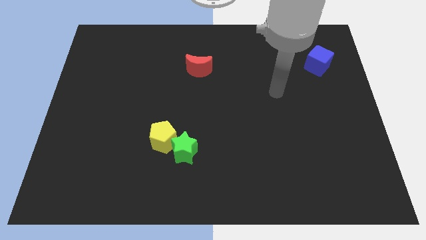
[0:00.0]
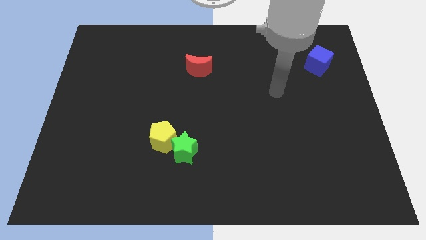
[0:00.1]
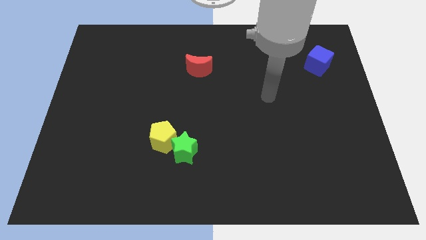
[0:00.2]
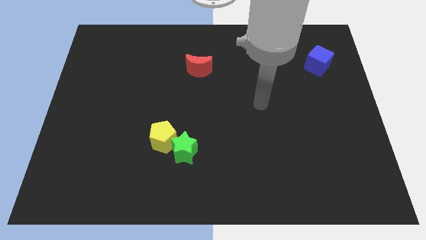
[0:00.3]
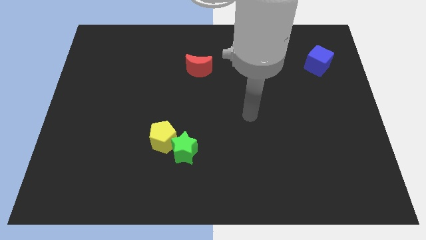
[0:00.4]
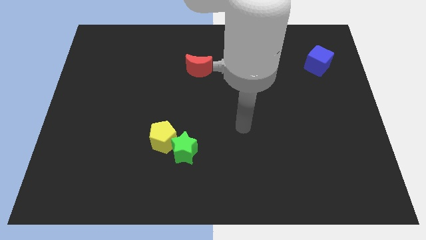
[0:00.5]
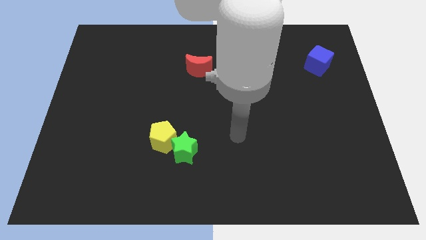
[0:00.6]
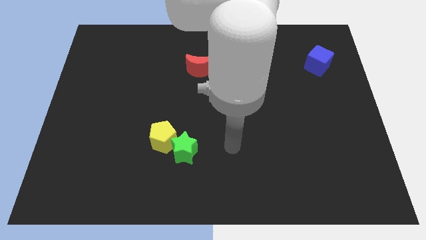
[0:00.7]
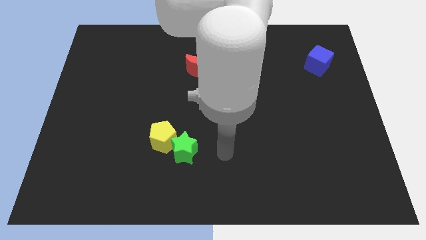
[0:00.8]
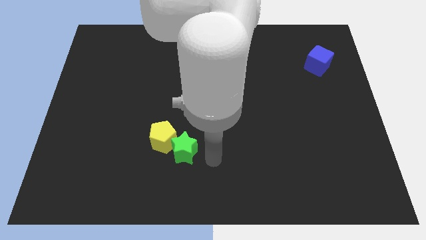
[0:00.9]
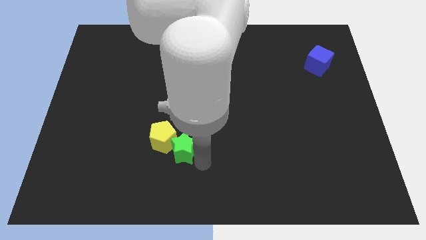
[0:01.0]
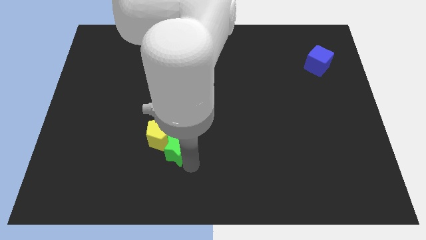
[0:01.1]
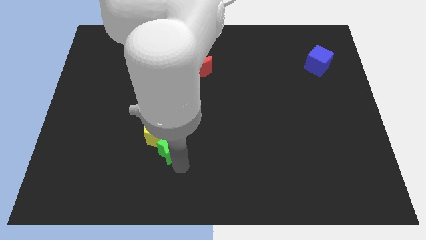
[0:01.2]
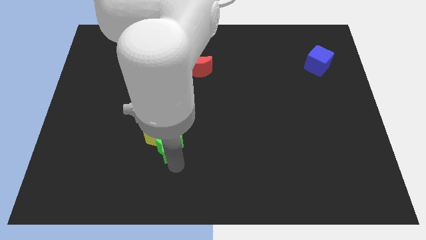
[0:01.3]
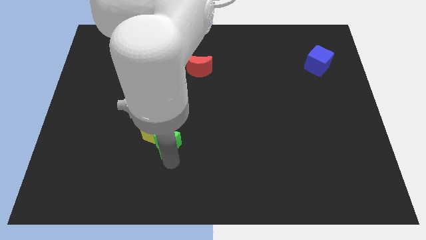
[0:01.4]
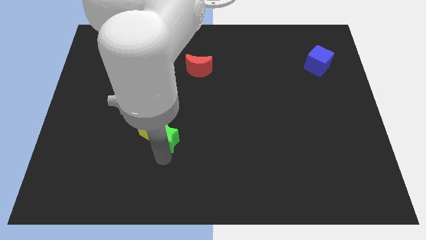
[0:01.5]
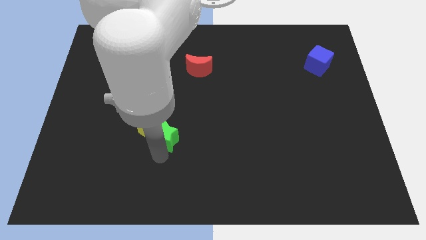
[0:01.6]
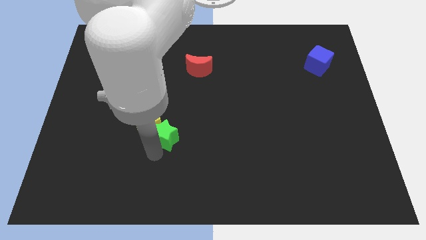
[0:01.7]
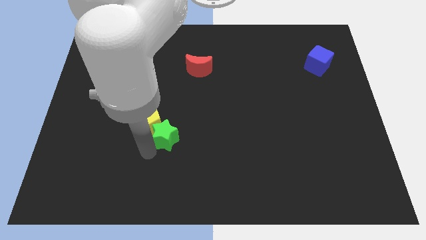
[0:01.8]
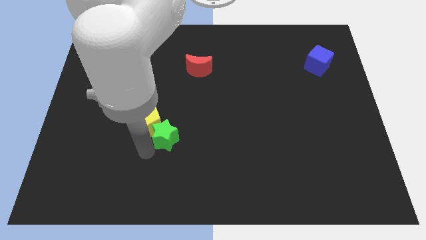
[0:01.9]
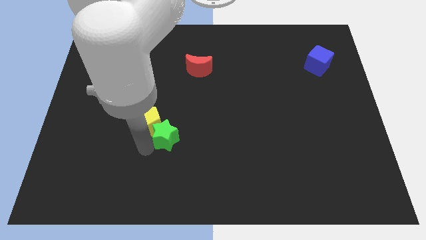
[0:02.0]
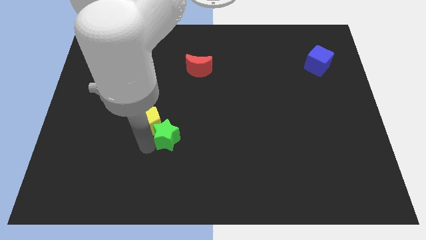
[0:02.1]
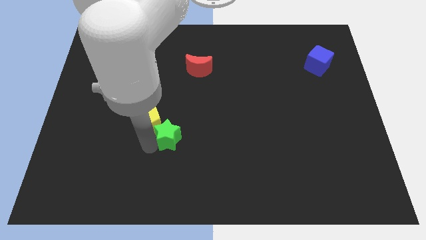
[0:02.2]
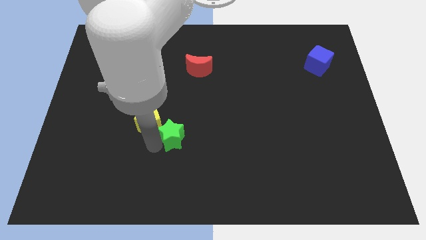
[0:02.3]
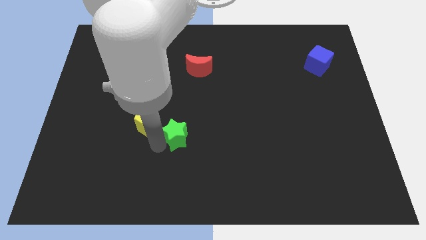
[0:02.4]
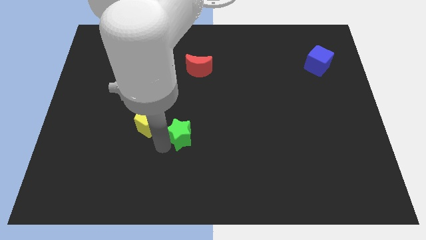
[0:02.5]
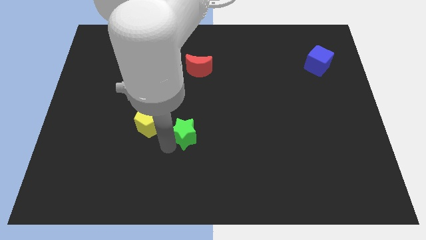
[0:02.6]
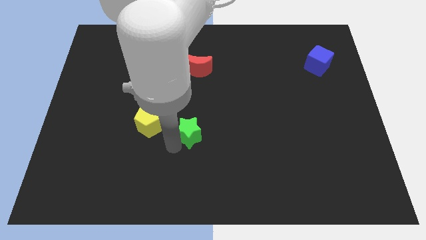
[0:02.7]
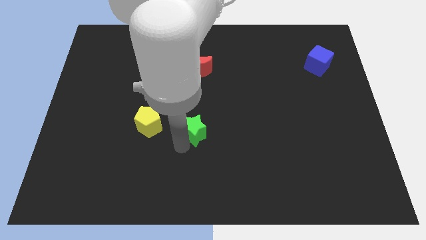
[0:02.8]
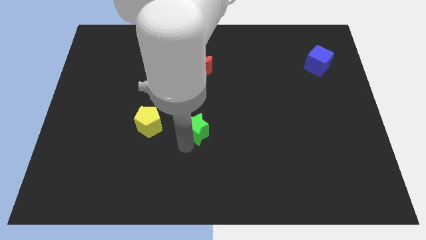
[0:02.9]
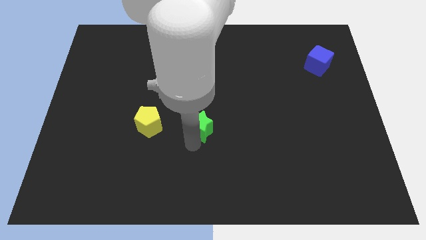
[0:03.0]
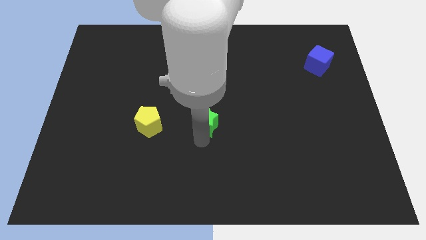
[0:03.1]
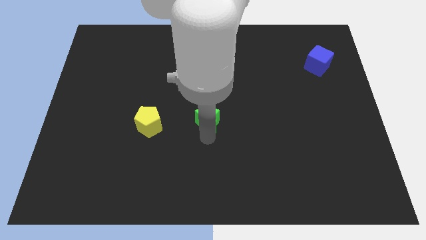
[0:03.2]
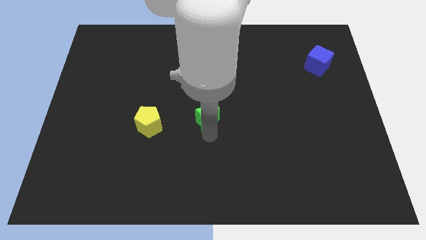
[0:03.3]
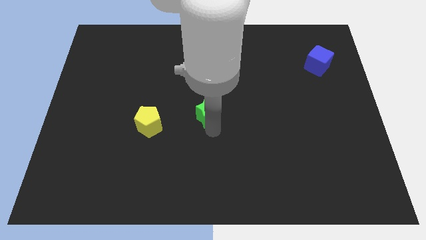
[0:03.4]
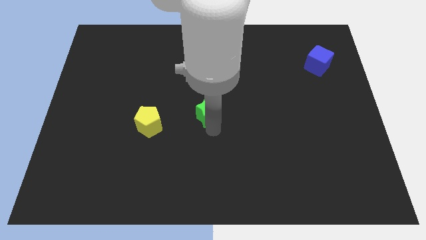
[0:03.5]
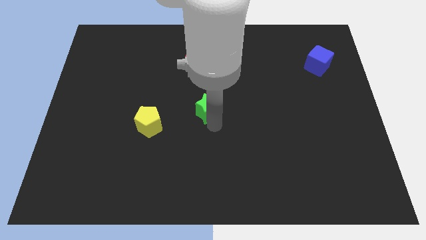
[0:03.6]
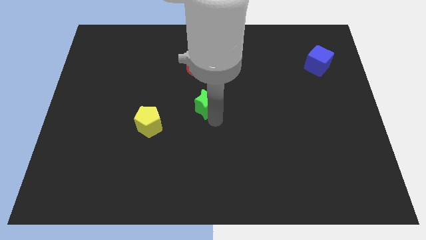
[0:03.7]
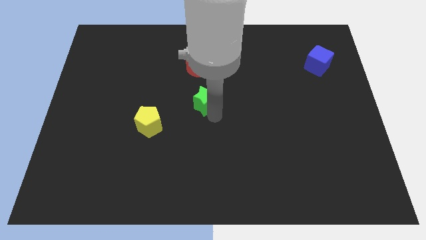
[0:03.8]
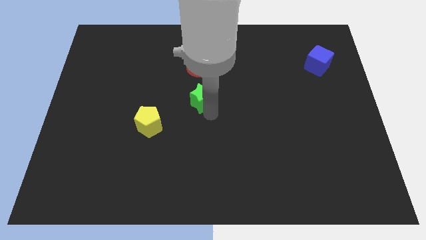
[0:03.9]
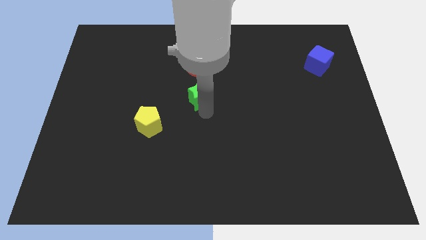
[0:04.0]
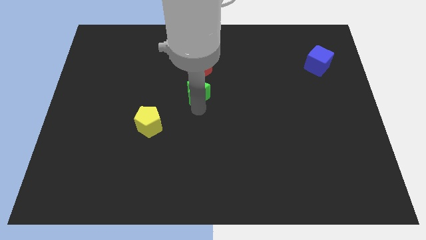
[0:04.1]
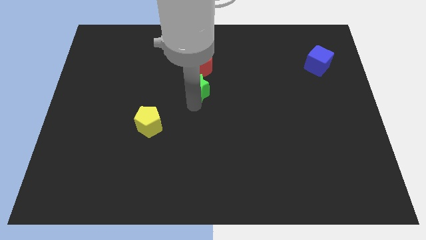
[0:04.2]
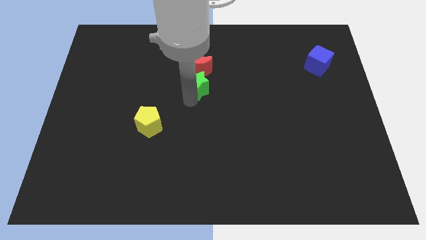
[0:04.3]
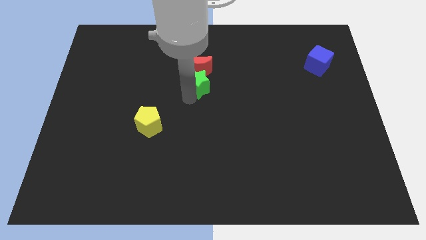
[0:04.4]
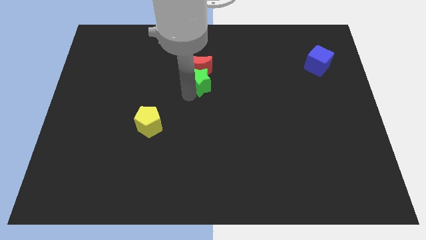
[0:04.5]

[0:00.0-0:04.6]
slide the star next to the red block

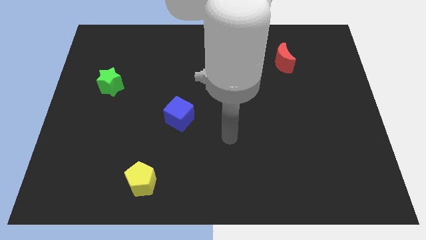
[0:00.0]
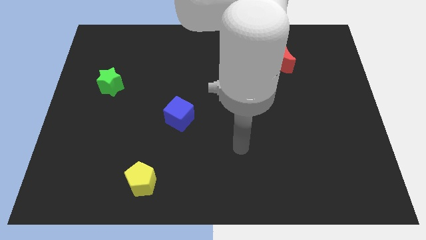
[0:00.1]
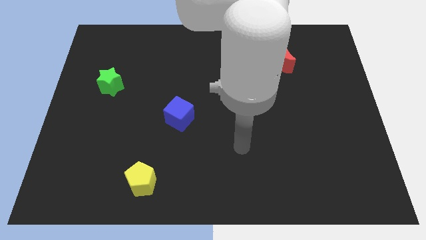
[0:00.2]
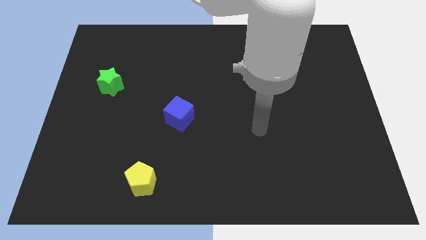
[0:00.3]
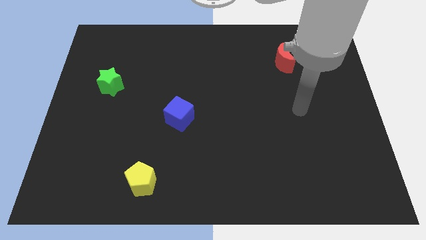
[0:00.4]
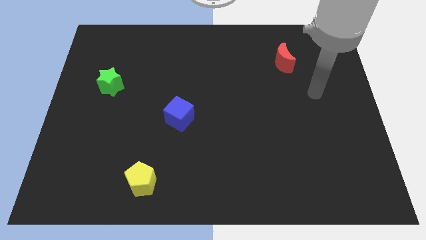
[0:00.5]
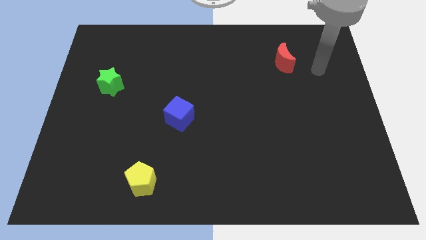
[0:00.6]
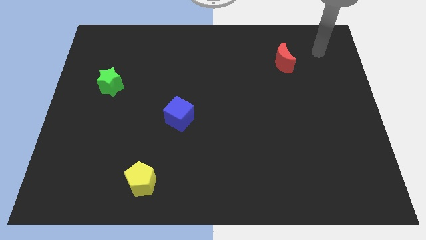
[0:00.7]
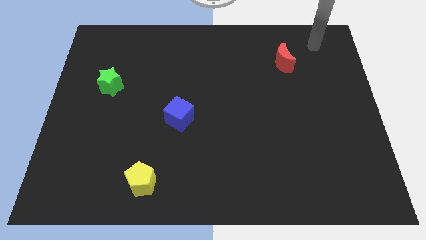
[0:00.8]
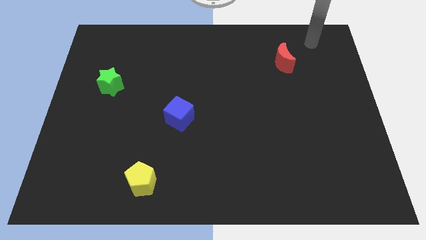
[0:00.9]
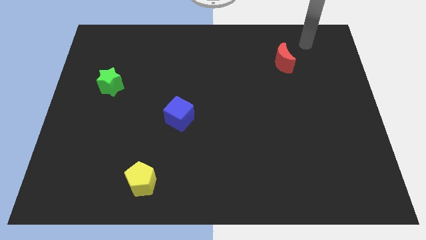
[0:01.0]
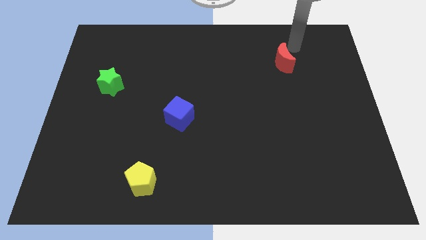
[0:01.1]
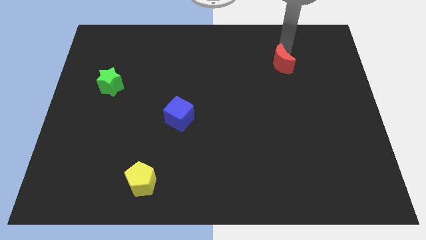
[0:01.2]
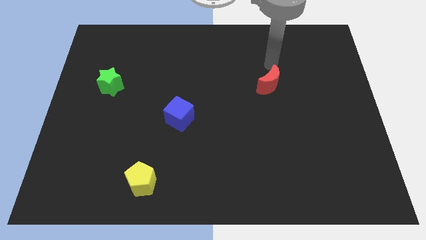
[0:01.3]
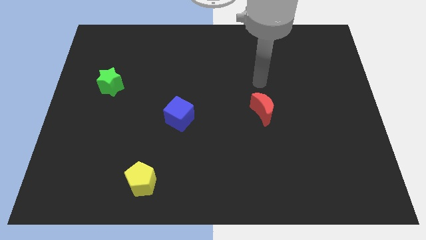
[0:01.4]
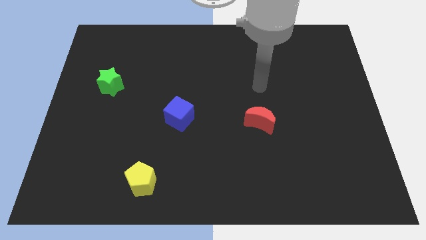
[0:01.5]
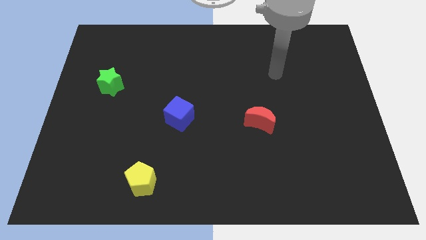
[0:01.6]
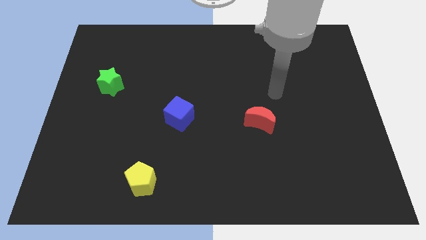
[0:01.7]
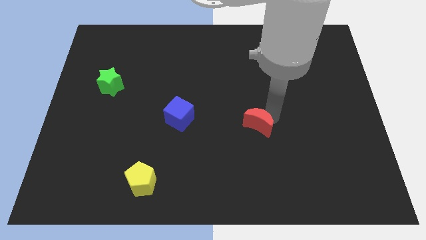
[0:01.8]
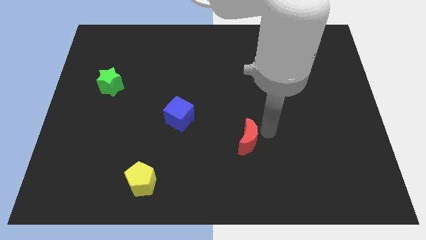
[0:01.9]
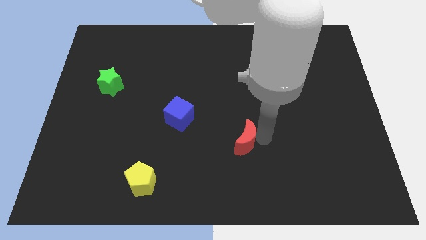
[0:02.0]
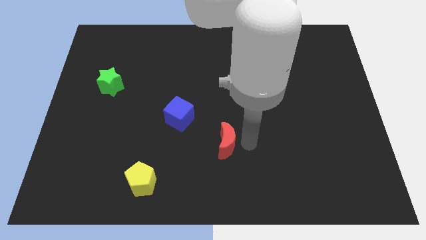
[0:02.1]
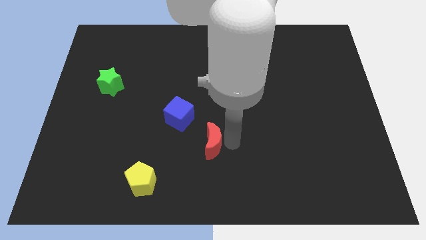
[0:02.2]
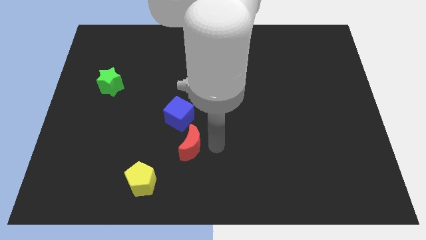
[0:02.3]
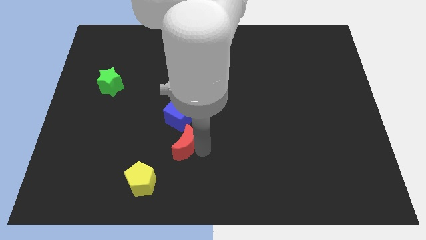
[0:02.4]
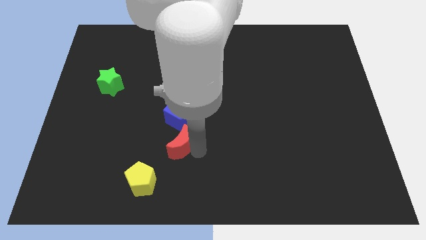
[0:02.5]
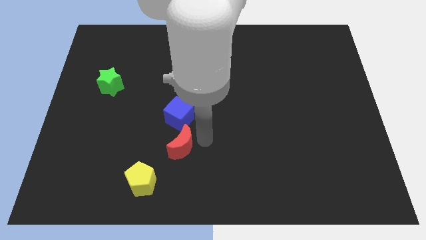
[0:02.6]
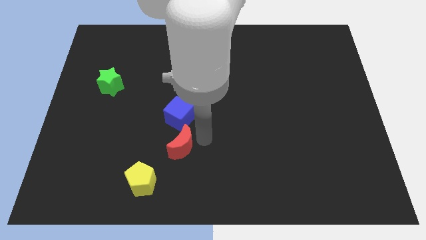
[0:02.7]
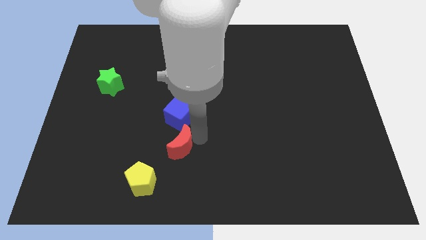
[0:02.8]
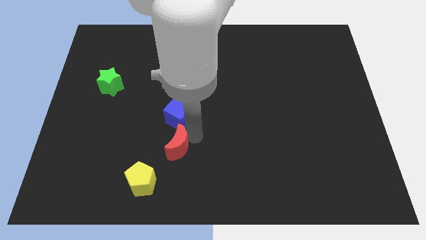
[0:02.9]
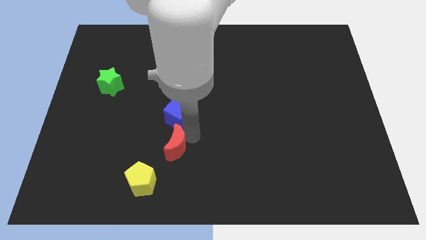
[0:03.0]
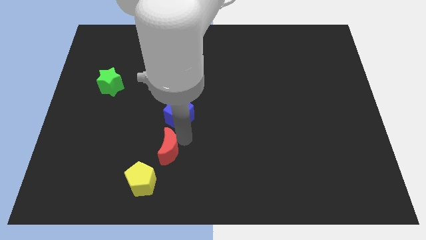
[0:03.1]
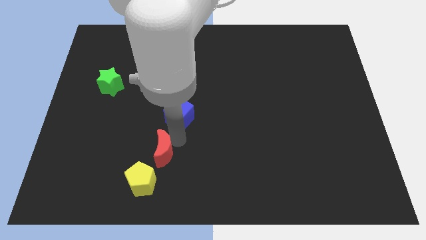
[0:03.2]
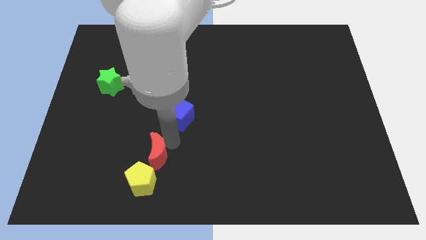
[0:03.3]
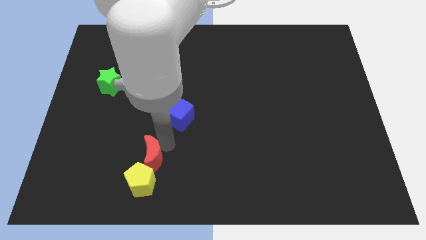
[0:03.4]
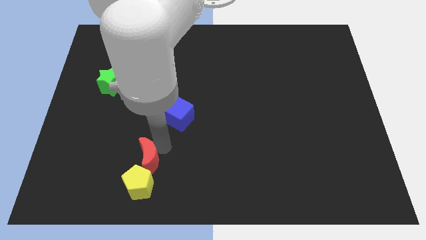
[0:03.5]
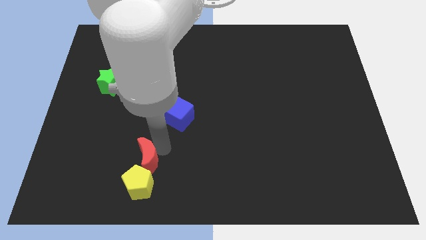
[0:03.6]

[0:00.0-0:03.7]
slide the moon next to the pentagon

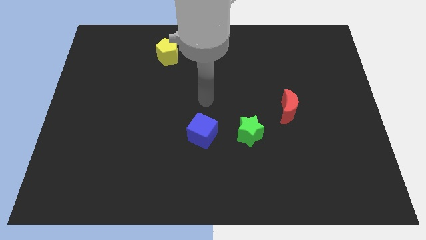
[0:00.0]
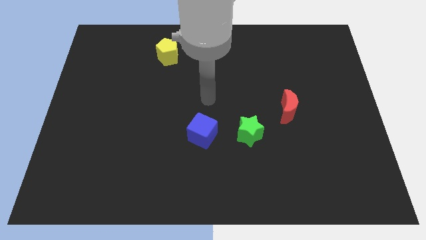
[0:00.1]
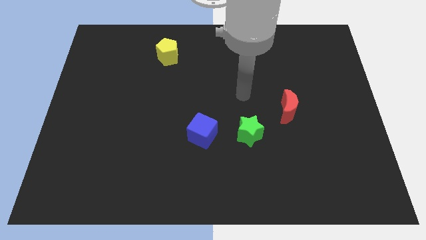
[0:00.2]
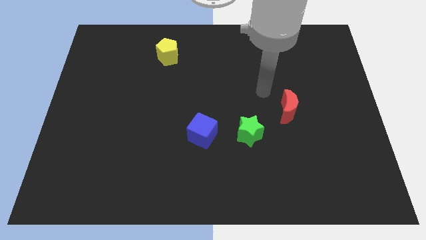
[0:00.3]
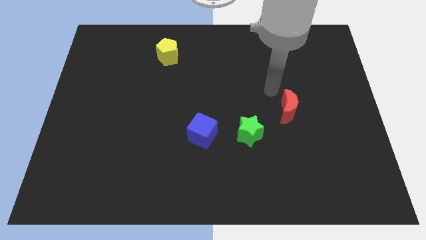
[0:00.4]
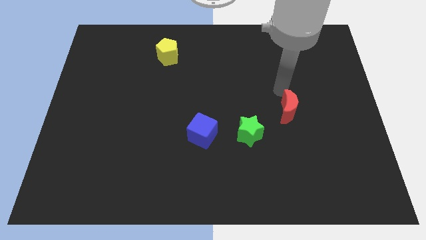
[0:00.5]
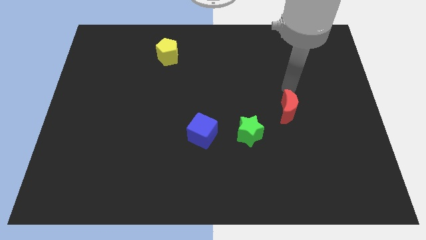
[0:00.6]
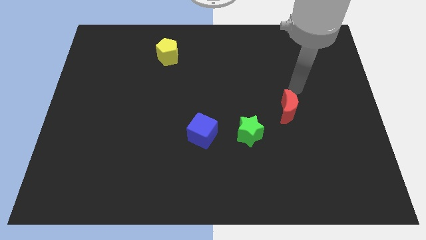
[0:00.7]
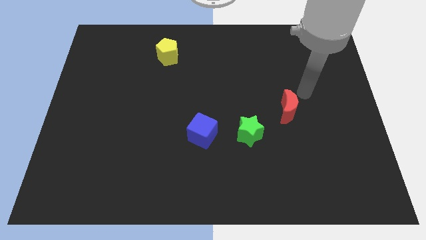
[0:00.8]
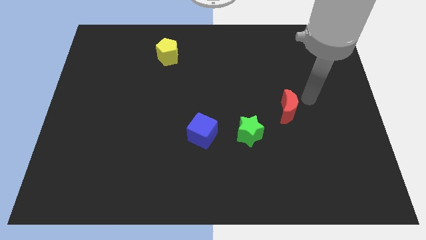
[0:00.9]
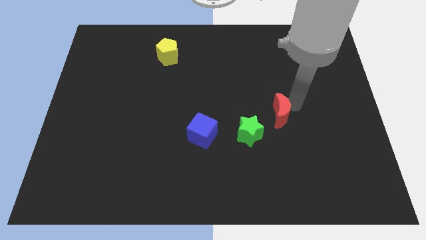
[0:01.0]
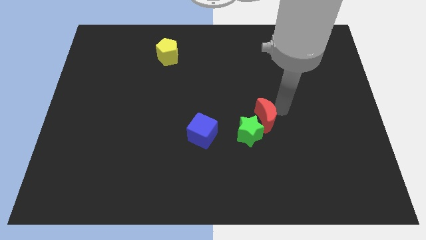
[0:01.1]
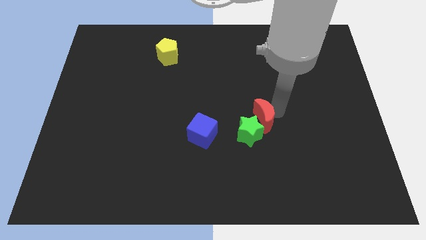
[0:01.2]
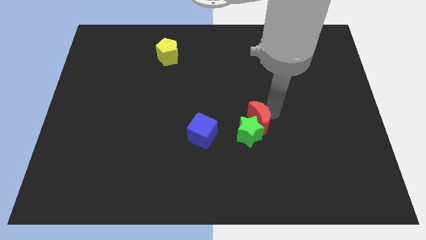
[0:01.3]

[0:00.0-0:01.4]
slide the red block to the star
